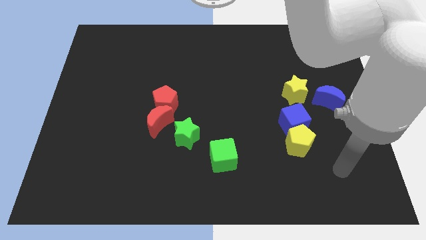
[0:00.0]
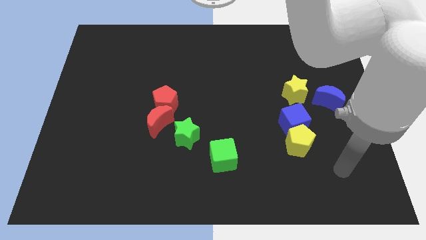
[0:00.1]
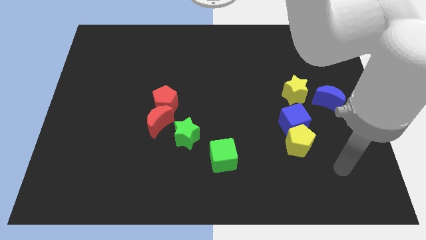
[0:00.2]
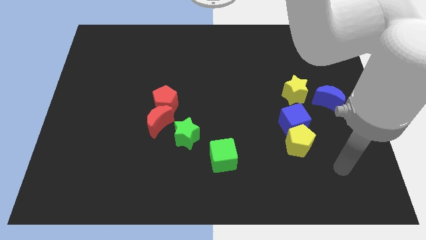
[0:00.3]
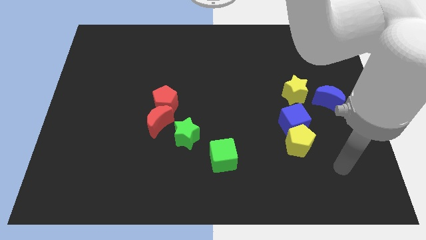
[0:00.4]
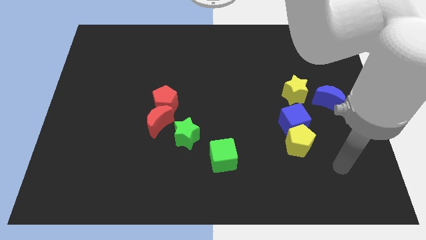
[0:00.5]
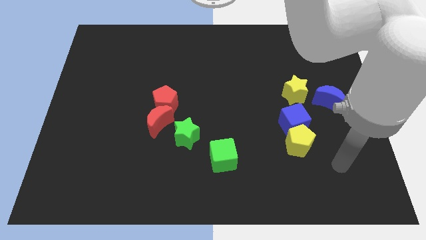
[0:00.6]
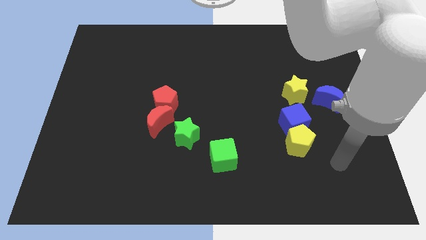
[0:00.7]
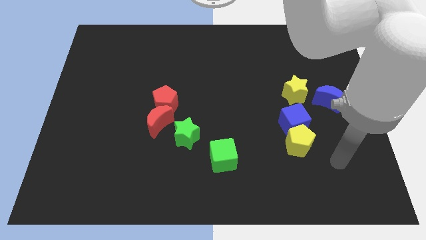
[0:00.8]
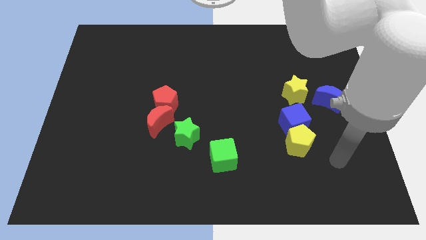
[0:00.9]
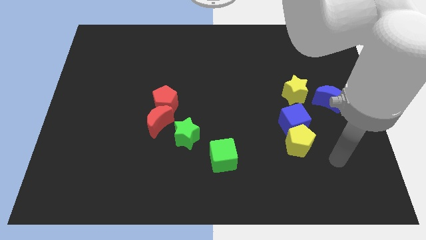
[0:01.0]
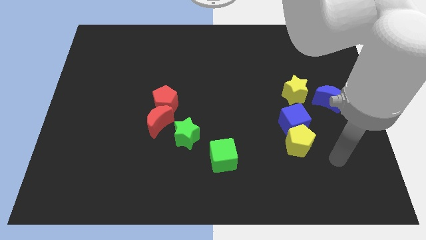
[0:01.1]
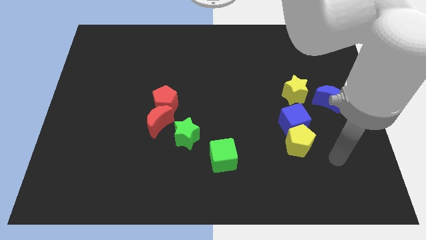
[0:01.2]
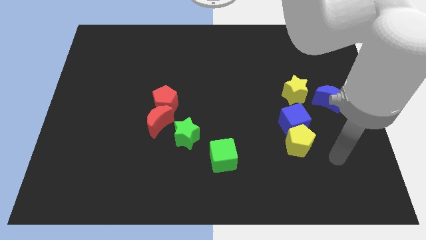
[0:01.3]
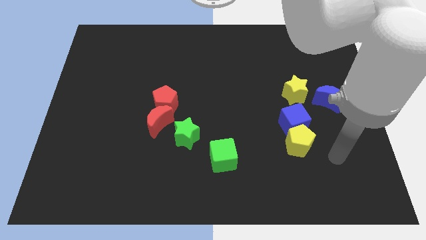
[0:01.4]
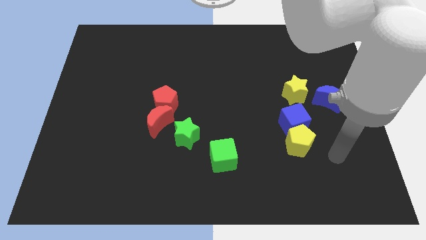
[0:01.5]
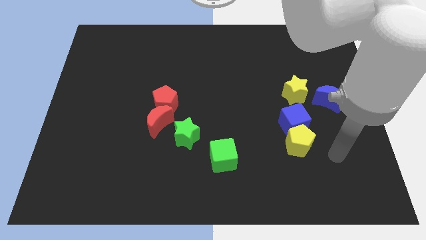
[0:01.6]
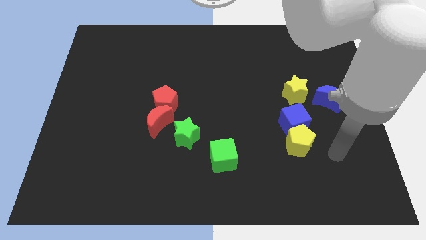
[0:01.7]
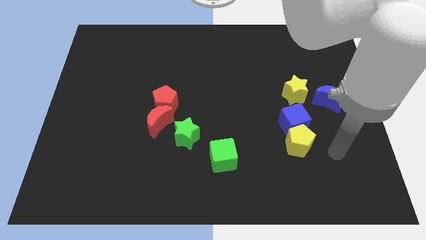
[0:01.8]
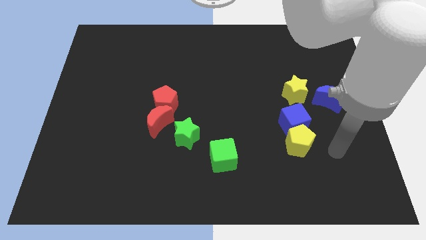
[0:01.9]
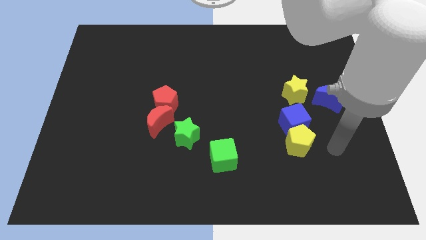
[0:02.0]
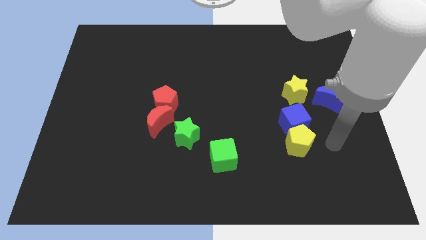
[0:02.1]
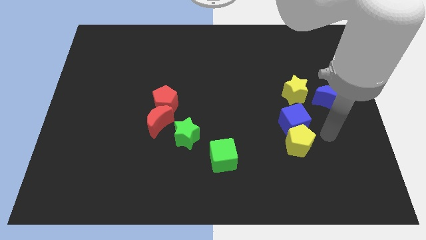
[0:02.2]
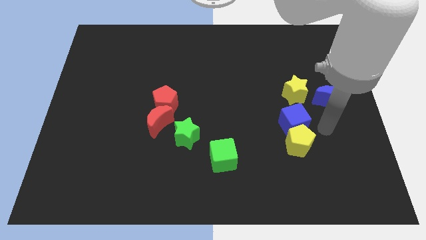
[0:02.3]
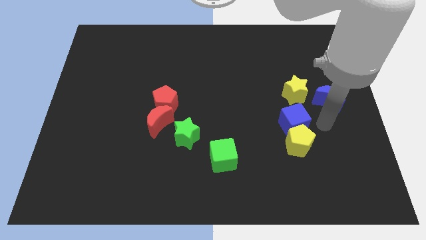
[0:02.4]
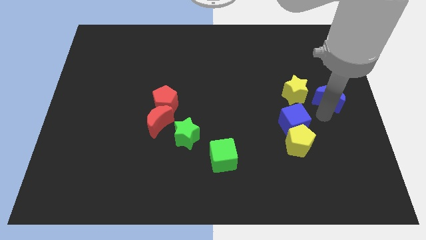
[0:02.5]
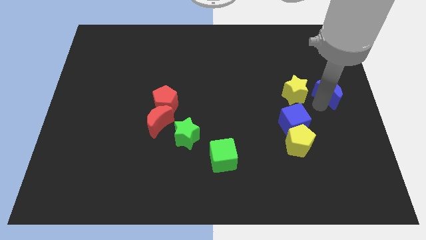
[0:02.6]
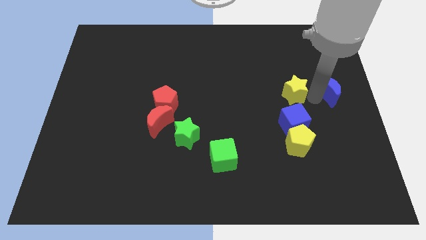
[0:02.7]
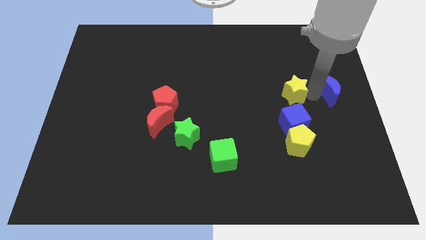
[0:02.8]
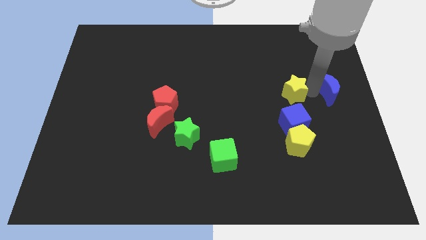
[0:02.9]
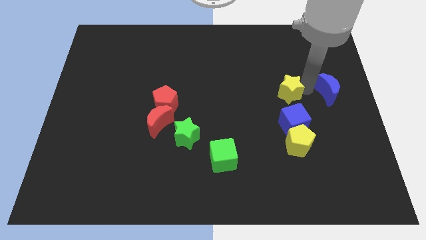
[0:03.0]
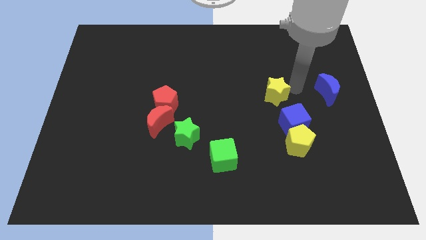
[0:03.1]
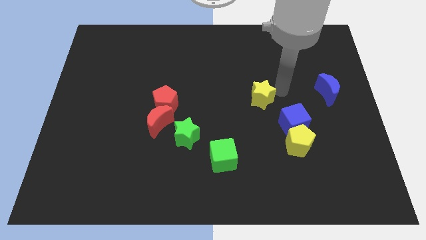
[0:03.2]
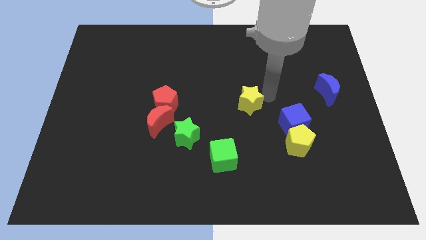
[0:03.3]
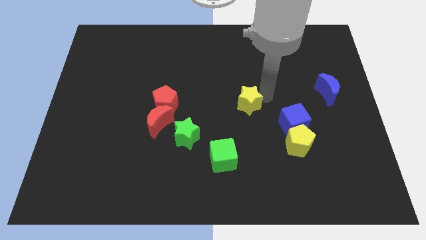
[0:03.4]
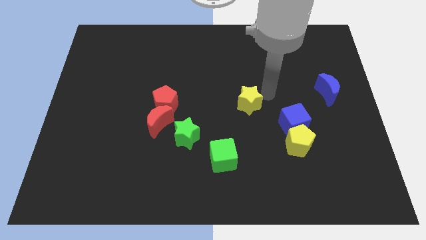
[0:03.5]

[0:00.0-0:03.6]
slightly push the yellow star to the left side of the board

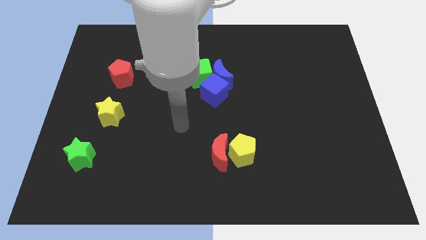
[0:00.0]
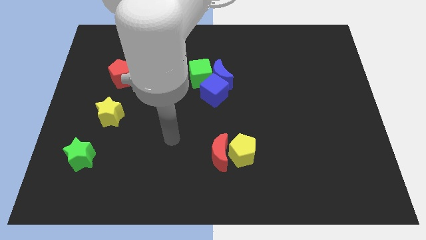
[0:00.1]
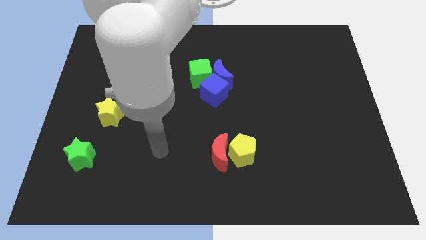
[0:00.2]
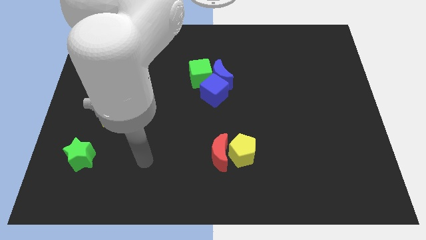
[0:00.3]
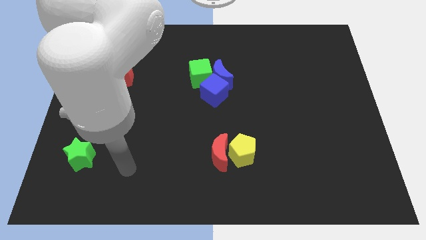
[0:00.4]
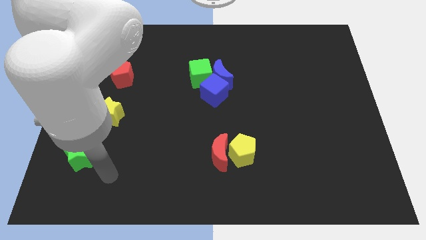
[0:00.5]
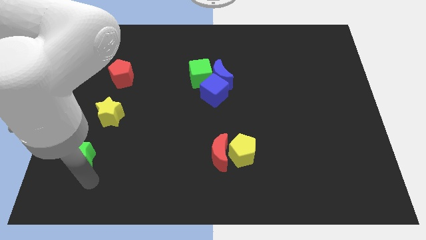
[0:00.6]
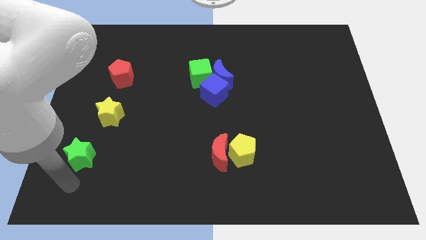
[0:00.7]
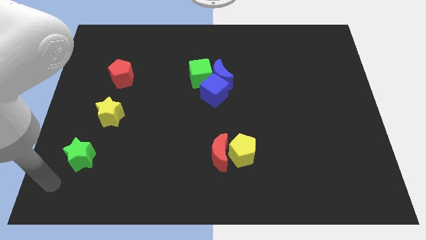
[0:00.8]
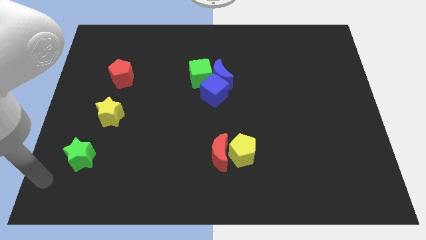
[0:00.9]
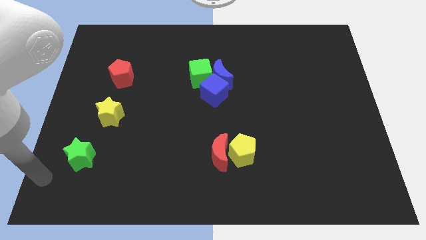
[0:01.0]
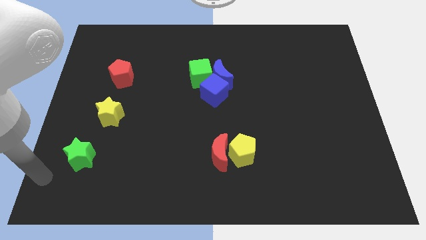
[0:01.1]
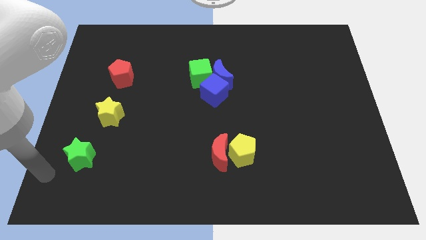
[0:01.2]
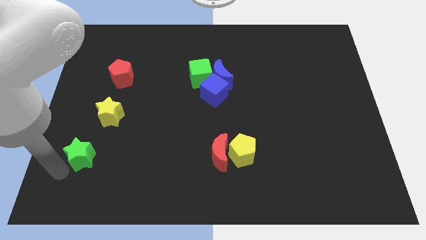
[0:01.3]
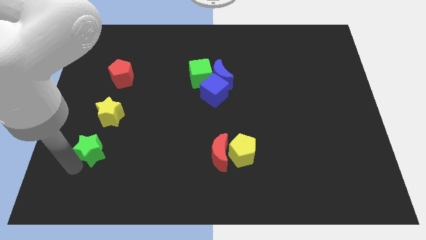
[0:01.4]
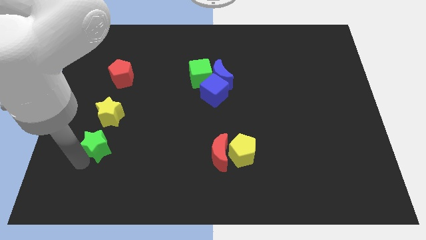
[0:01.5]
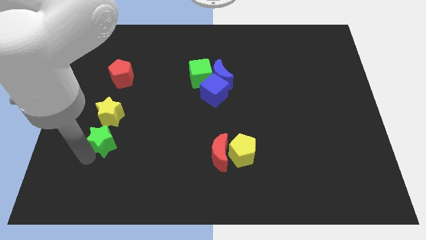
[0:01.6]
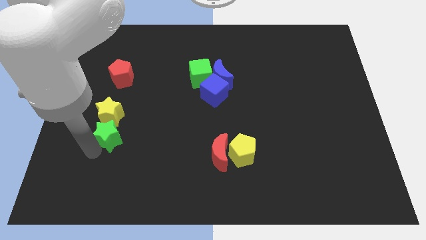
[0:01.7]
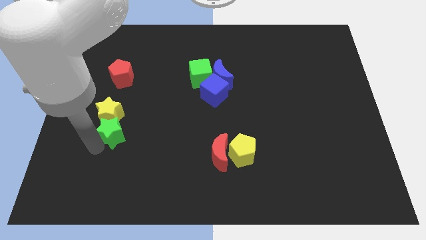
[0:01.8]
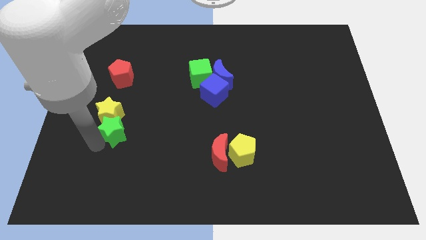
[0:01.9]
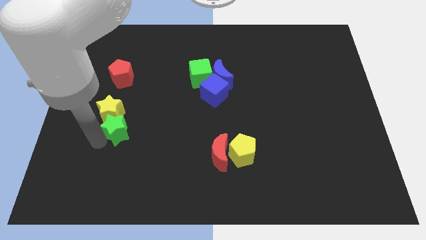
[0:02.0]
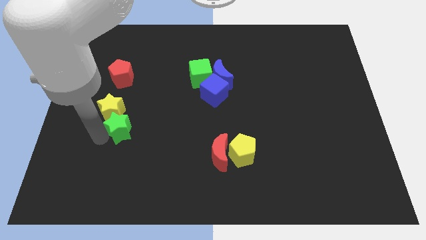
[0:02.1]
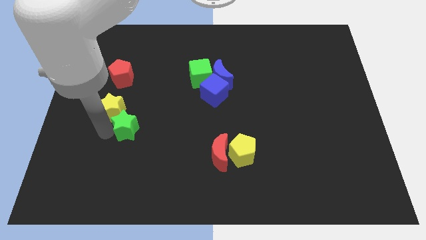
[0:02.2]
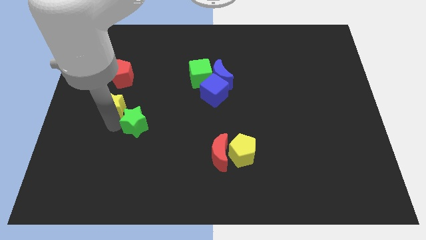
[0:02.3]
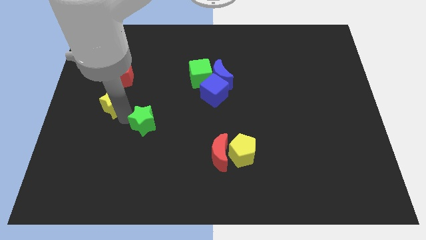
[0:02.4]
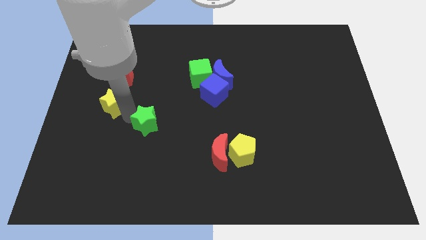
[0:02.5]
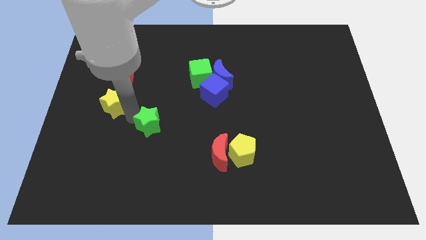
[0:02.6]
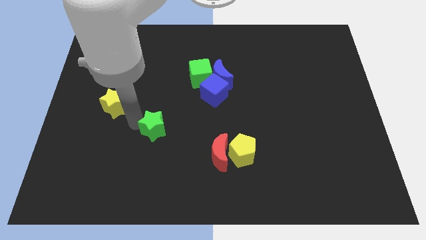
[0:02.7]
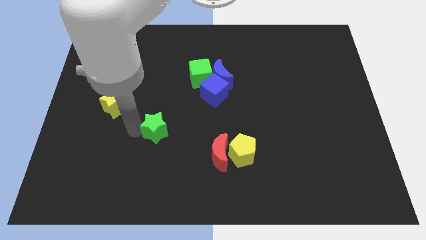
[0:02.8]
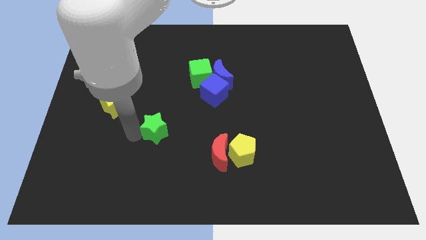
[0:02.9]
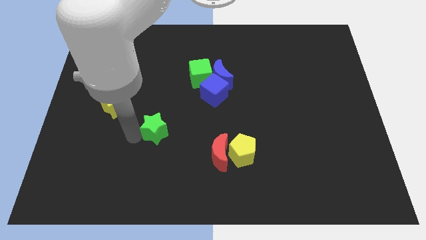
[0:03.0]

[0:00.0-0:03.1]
put the green star diagonally bottom right to the yellow star

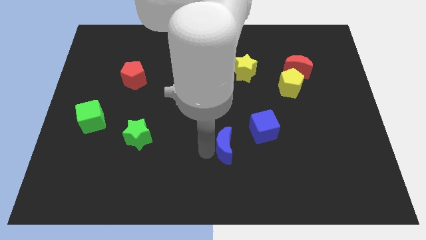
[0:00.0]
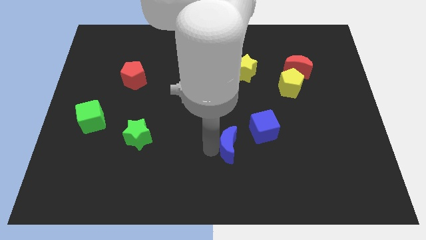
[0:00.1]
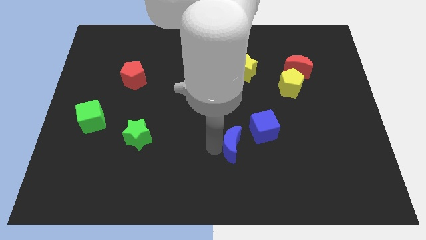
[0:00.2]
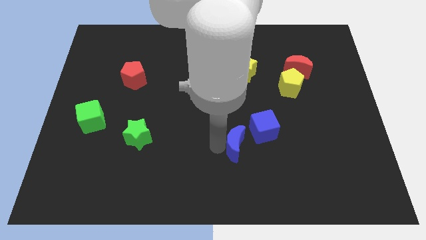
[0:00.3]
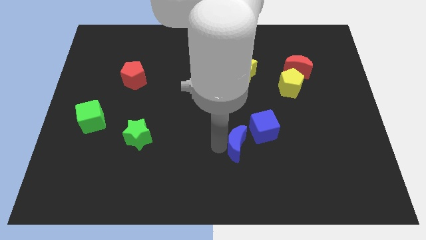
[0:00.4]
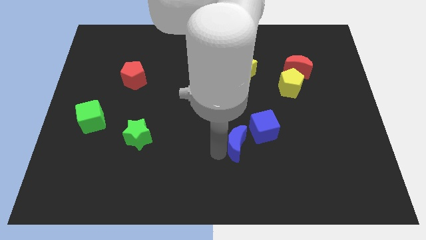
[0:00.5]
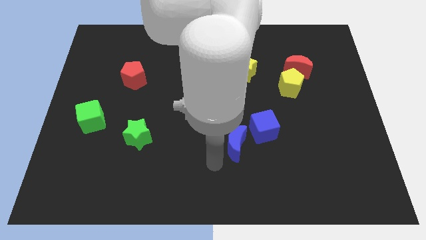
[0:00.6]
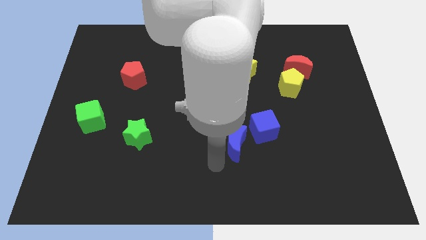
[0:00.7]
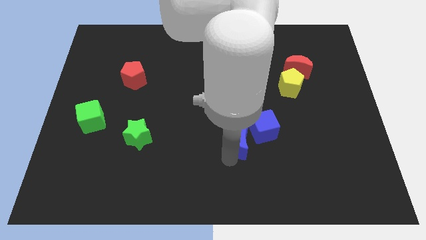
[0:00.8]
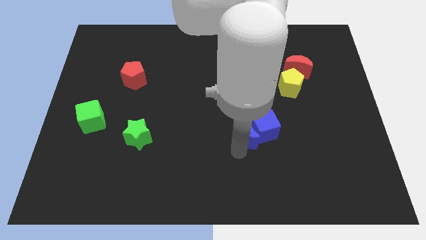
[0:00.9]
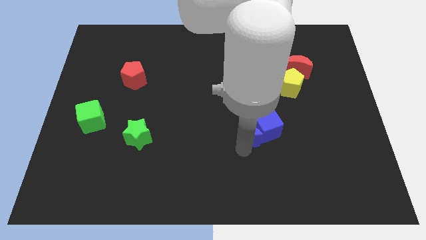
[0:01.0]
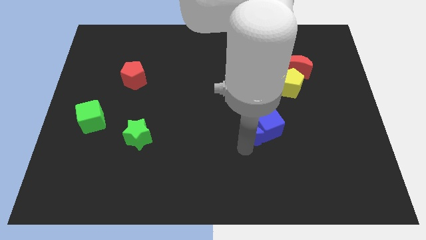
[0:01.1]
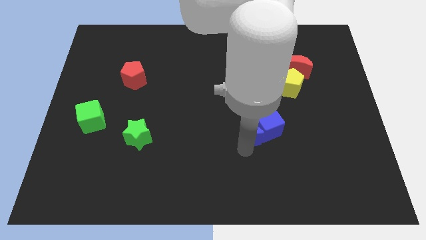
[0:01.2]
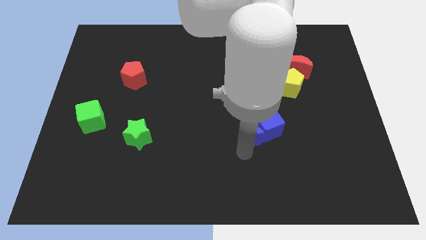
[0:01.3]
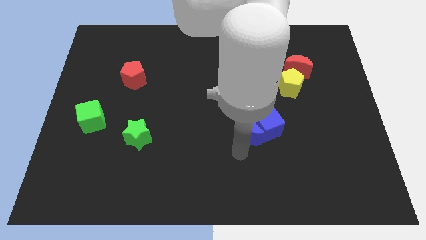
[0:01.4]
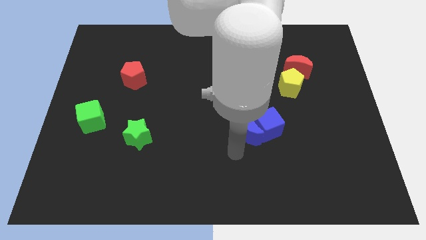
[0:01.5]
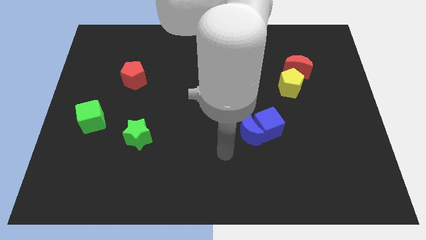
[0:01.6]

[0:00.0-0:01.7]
push the blue crescent into the blue cube

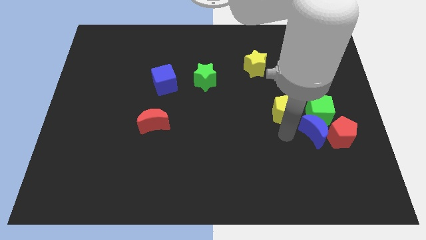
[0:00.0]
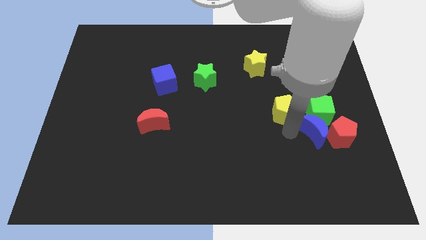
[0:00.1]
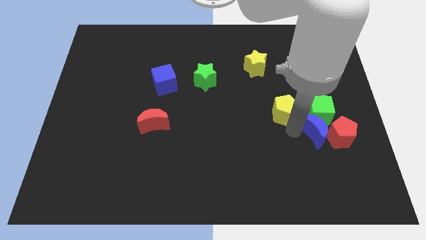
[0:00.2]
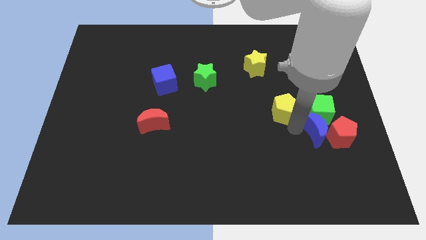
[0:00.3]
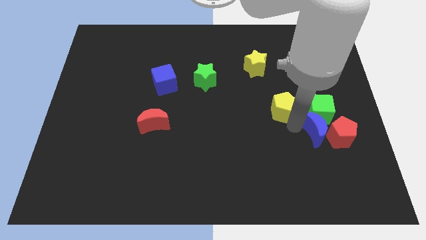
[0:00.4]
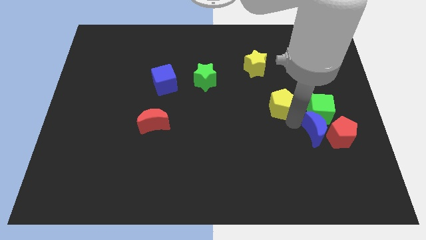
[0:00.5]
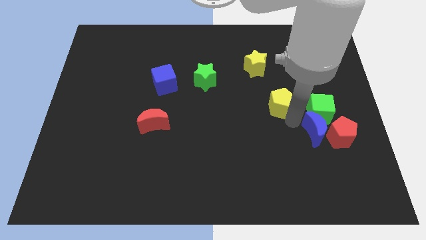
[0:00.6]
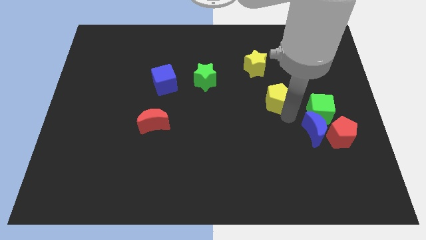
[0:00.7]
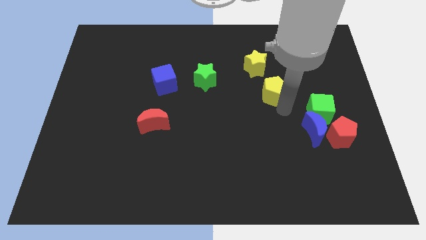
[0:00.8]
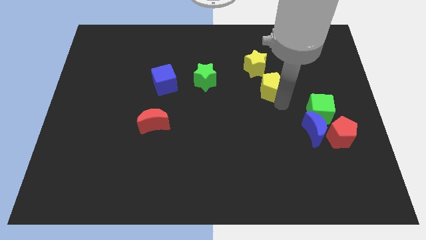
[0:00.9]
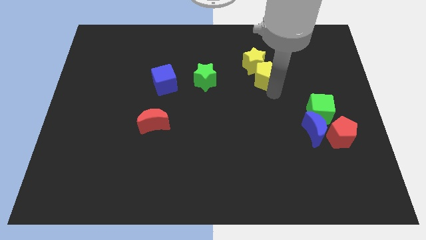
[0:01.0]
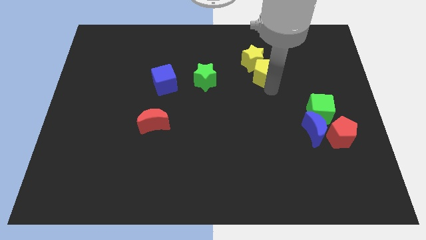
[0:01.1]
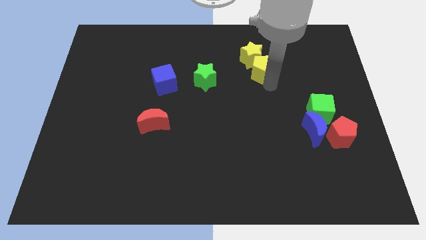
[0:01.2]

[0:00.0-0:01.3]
place the yellow pentagon to the bottom of the yellow star
